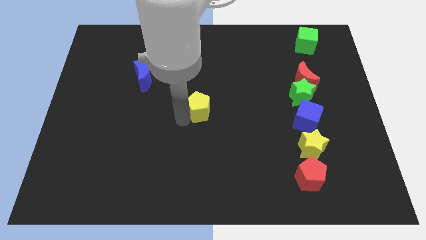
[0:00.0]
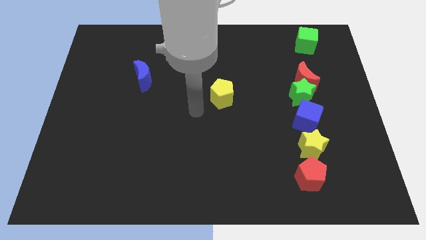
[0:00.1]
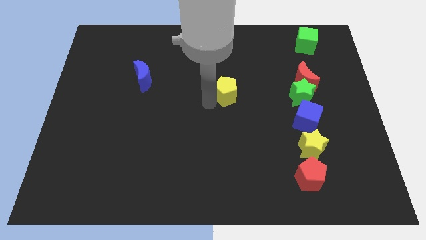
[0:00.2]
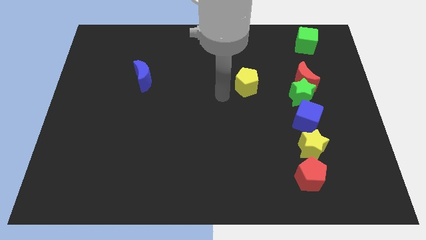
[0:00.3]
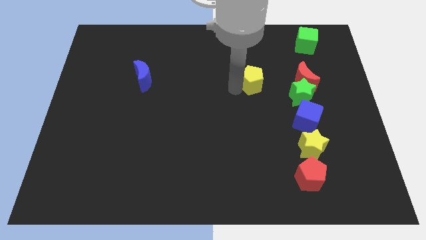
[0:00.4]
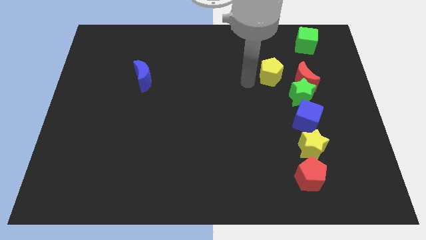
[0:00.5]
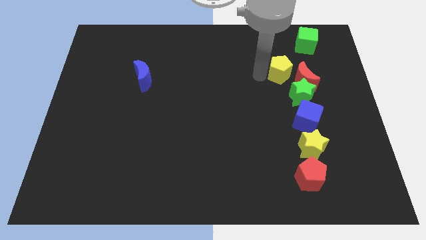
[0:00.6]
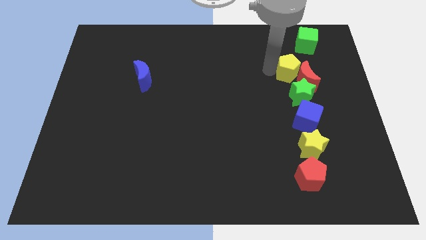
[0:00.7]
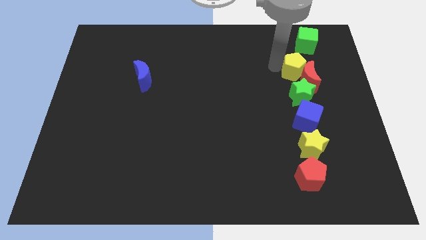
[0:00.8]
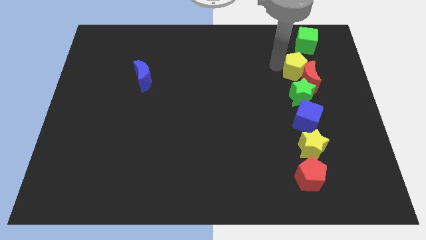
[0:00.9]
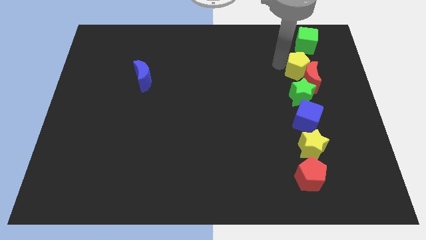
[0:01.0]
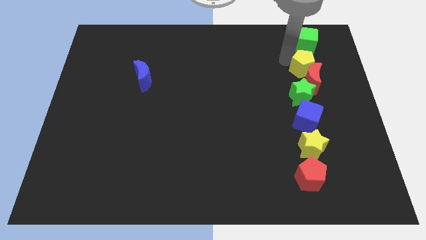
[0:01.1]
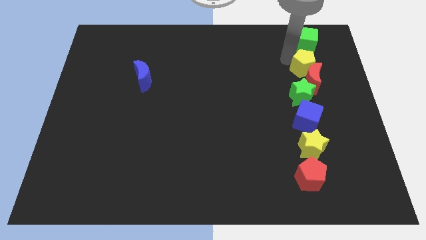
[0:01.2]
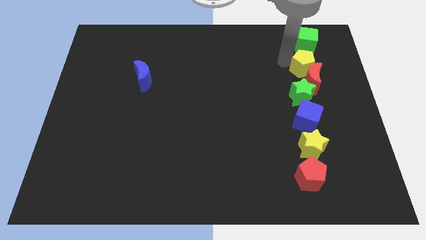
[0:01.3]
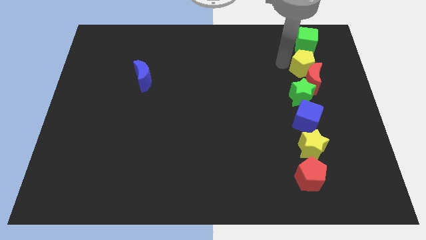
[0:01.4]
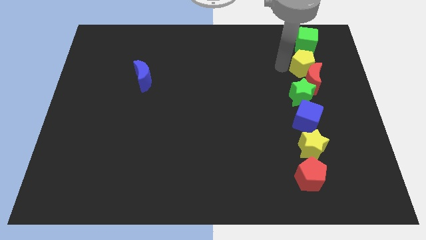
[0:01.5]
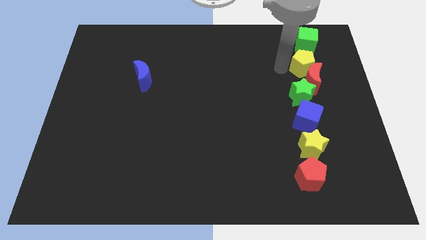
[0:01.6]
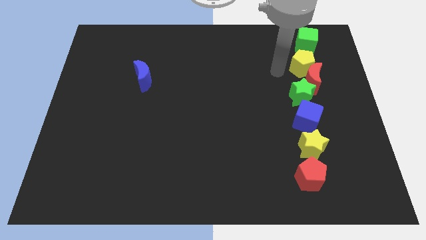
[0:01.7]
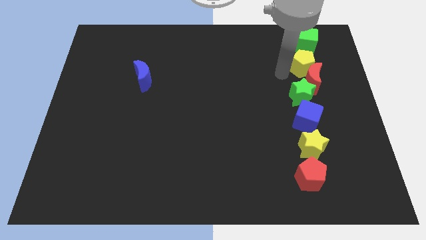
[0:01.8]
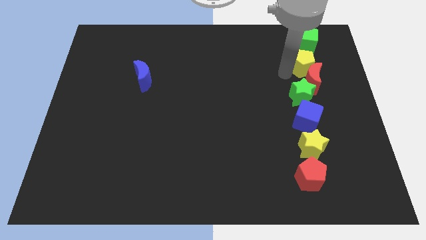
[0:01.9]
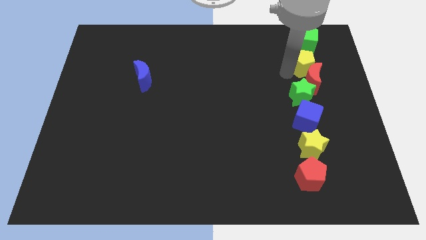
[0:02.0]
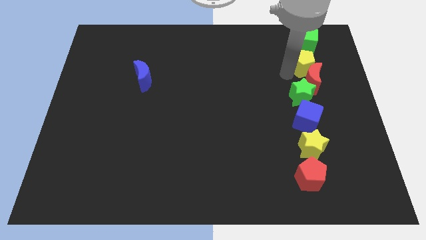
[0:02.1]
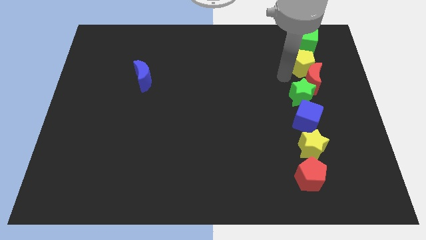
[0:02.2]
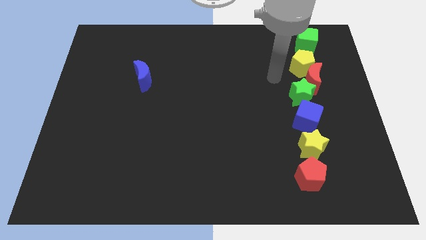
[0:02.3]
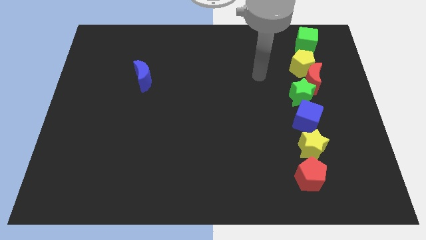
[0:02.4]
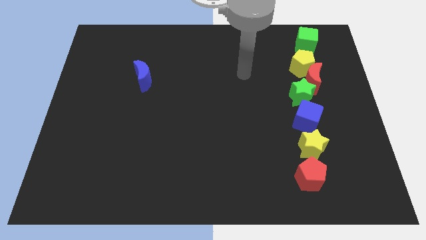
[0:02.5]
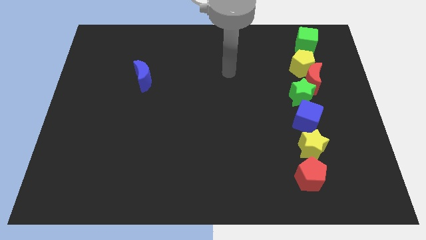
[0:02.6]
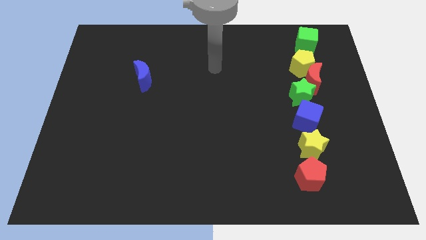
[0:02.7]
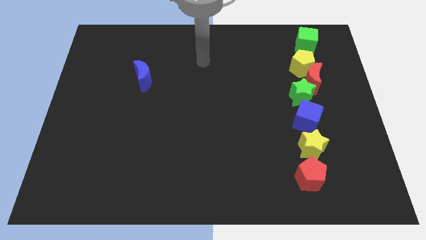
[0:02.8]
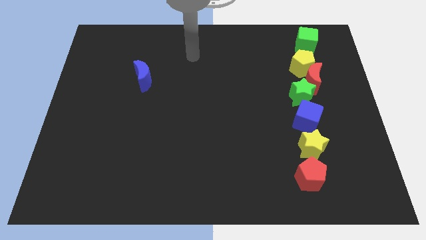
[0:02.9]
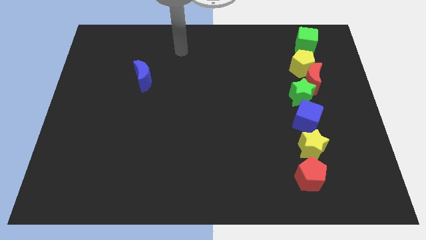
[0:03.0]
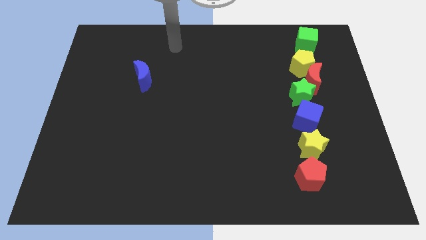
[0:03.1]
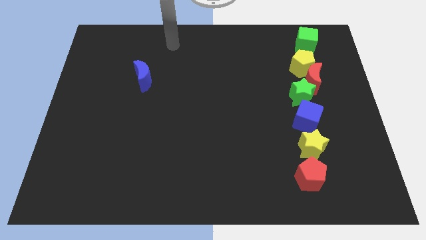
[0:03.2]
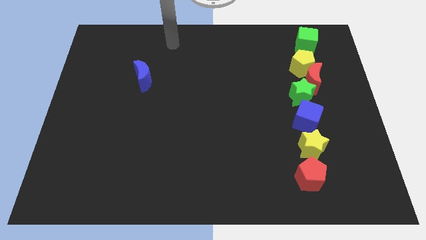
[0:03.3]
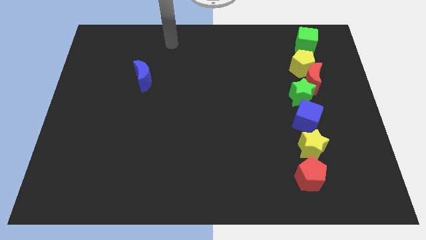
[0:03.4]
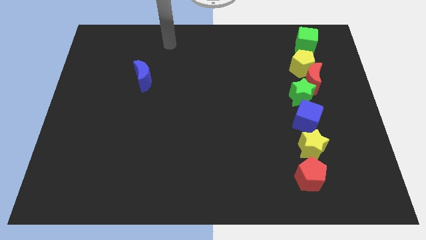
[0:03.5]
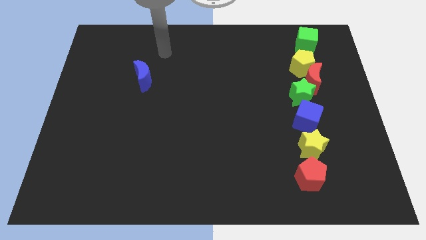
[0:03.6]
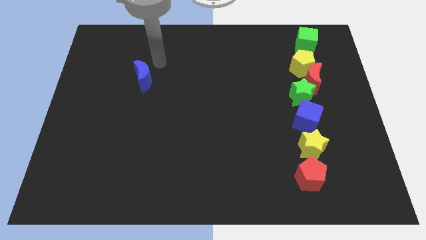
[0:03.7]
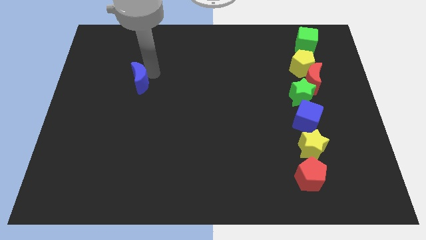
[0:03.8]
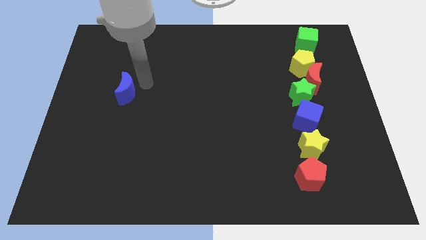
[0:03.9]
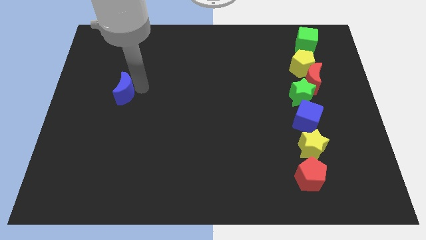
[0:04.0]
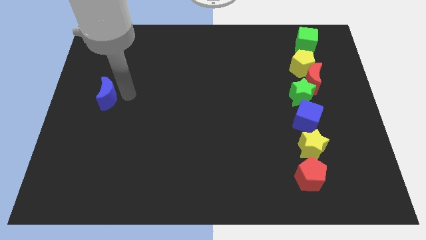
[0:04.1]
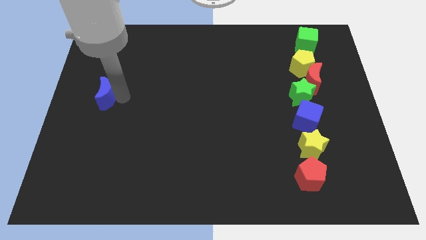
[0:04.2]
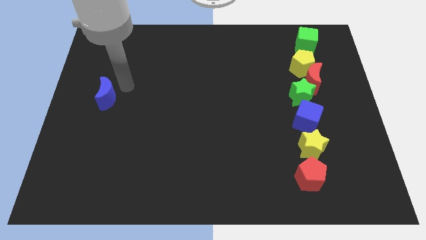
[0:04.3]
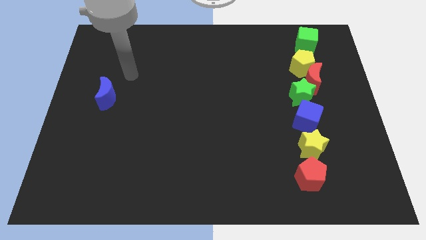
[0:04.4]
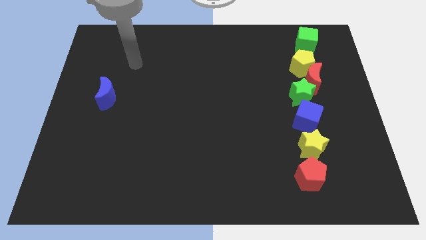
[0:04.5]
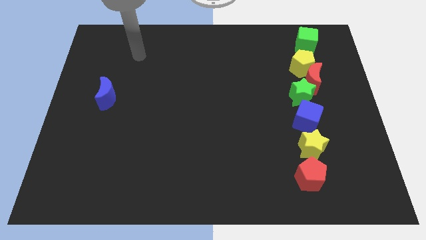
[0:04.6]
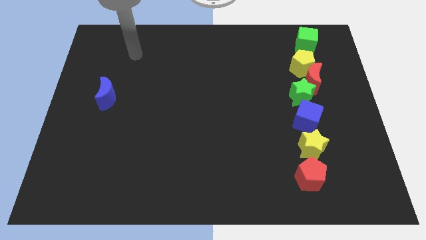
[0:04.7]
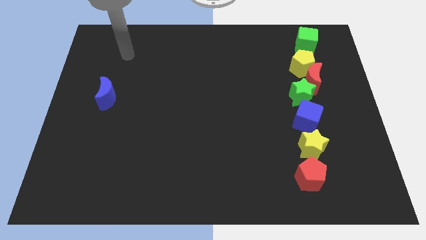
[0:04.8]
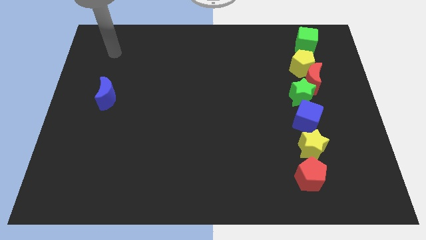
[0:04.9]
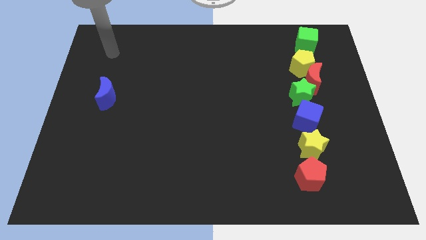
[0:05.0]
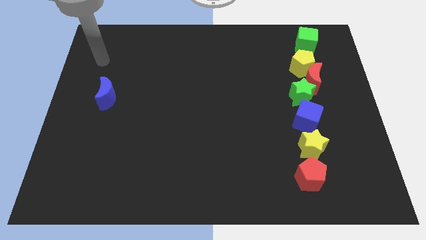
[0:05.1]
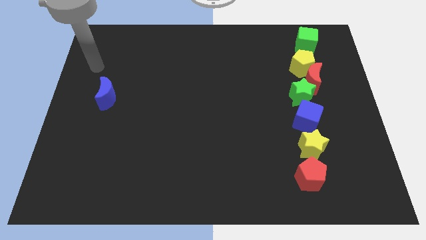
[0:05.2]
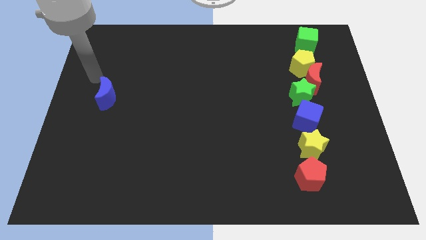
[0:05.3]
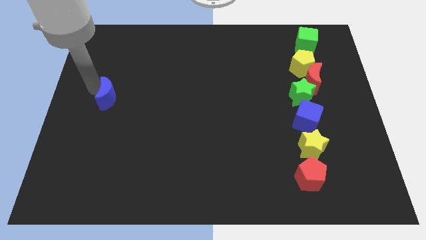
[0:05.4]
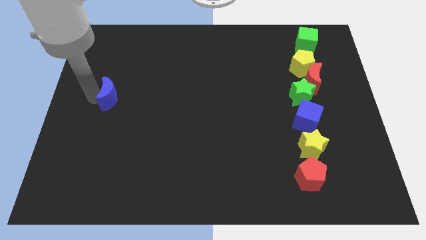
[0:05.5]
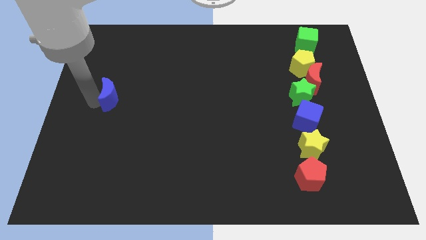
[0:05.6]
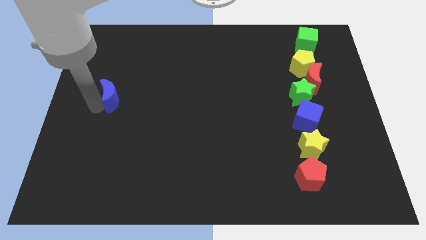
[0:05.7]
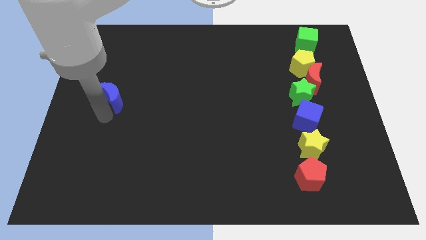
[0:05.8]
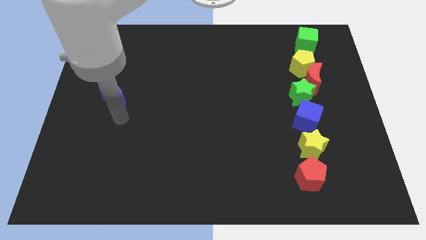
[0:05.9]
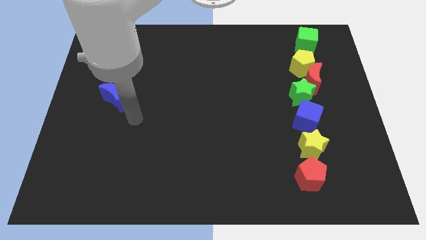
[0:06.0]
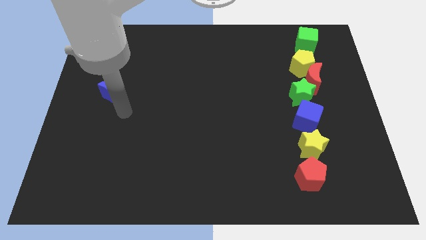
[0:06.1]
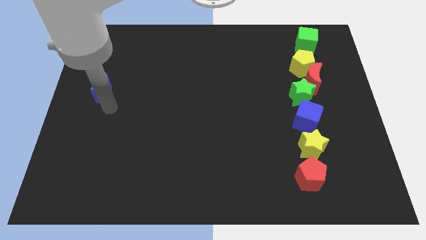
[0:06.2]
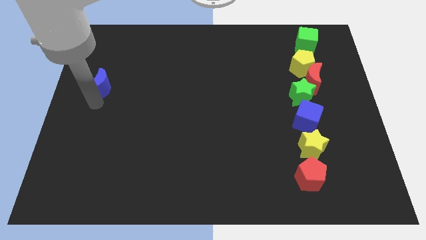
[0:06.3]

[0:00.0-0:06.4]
place the yellow pentagon in between the green cube and the red moon

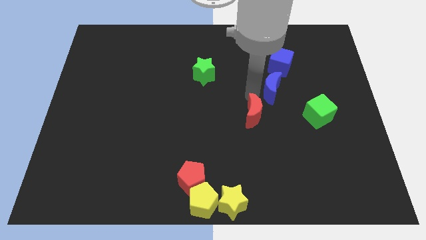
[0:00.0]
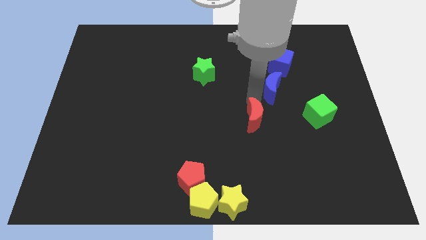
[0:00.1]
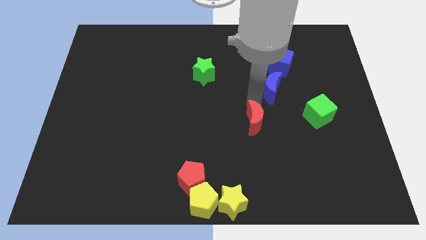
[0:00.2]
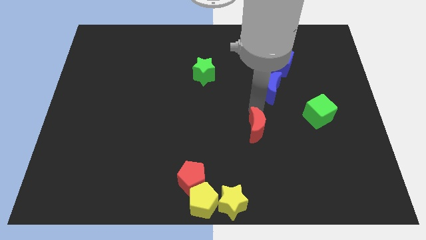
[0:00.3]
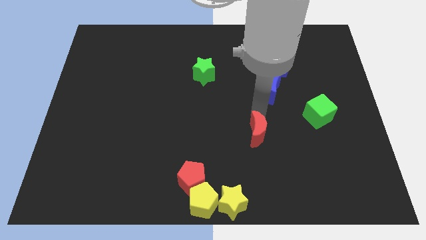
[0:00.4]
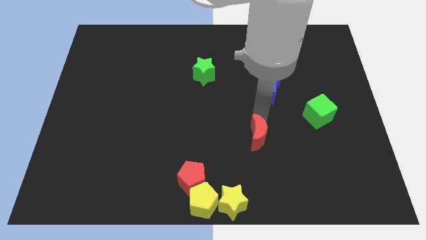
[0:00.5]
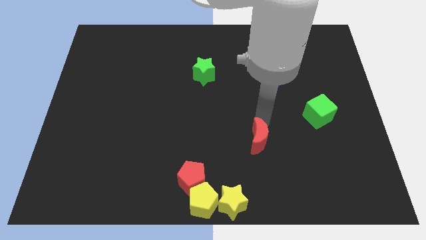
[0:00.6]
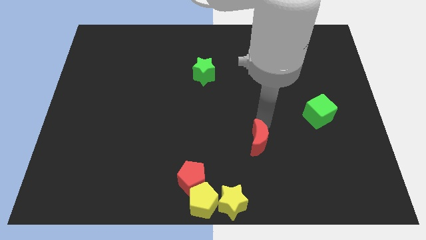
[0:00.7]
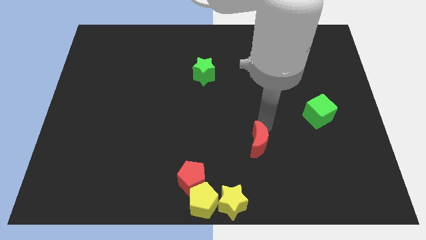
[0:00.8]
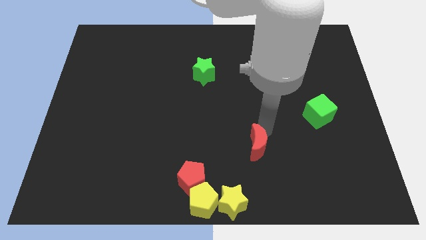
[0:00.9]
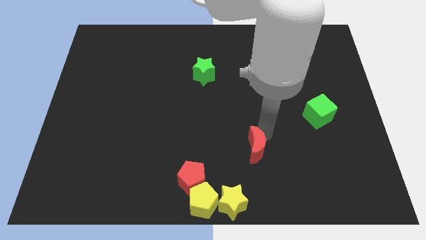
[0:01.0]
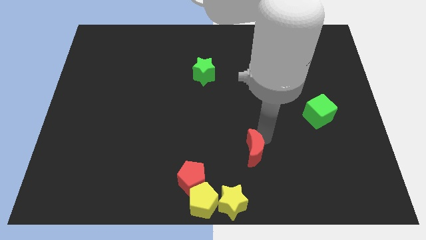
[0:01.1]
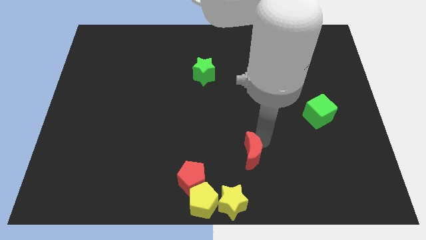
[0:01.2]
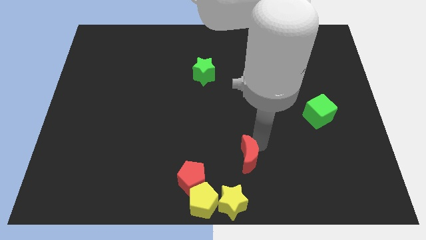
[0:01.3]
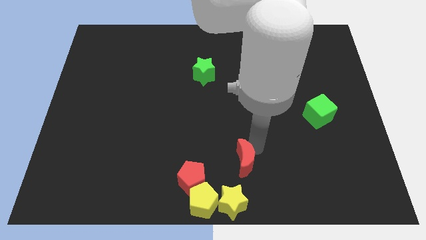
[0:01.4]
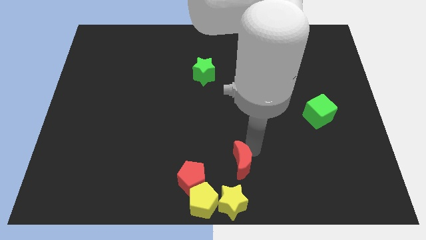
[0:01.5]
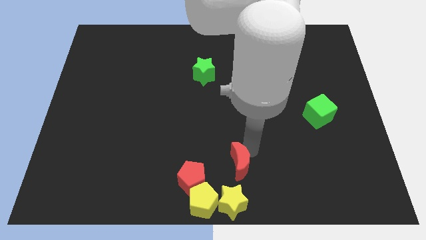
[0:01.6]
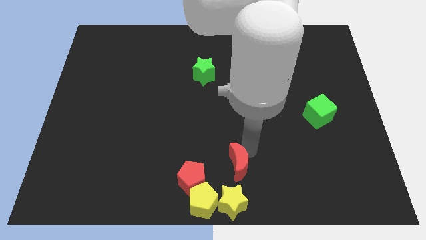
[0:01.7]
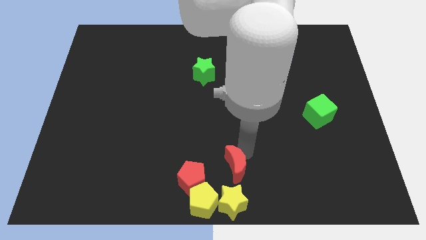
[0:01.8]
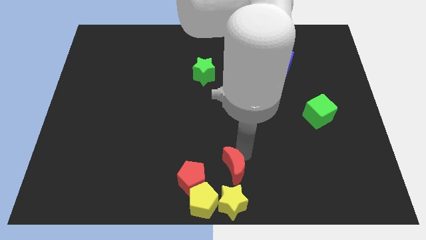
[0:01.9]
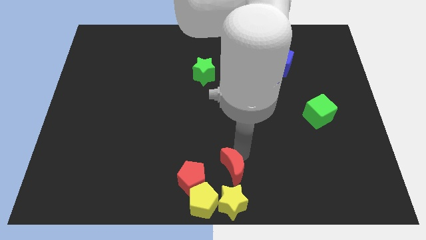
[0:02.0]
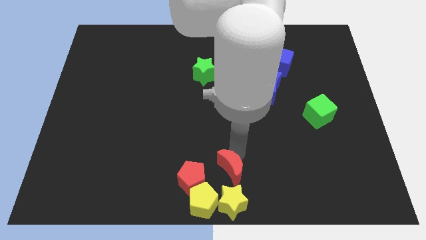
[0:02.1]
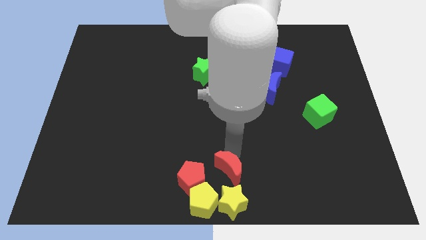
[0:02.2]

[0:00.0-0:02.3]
move the red crescent towards yellow star

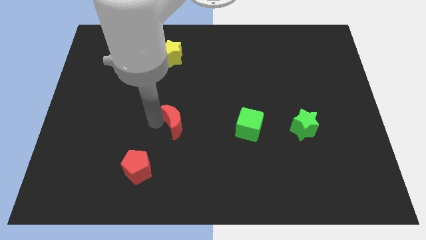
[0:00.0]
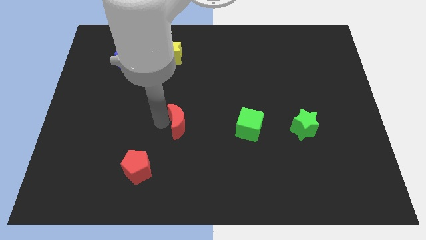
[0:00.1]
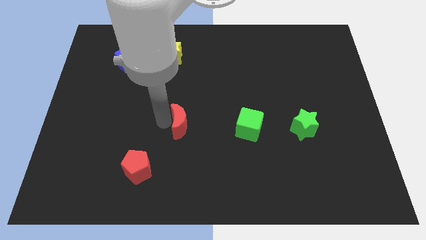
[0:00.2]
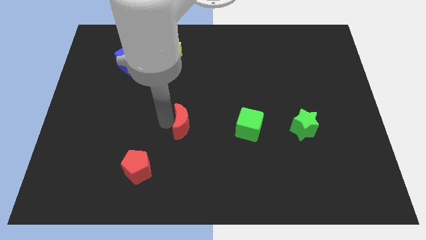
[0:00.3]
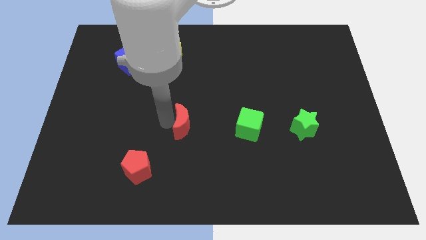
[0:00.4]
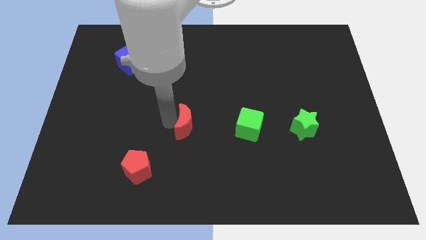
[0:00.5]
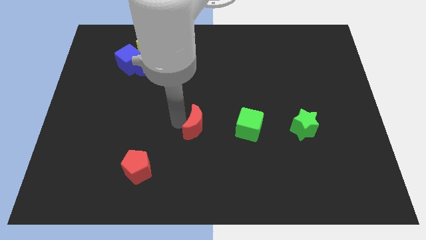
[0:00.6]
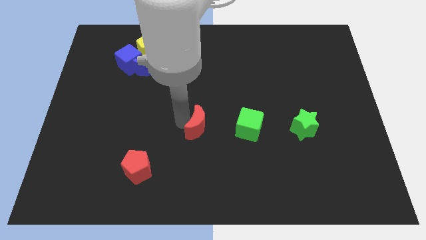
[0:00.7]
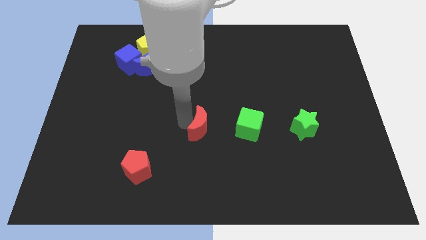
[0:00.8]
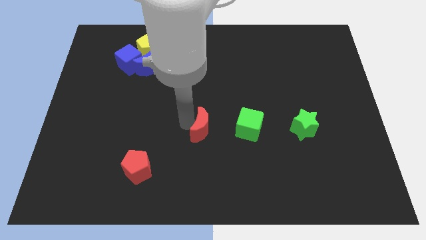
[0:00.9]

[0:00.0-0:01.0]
move the red moon to the left of the green cube
